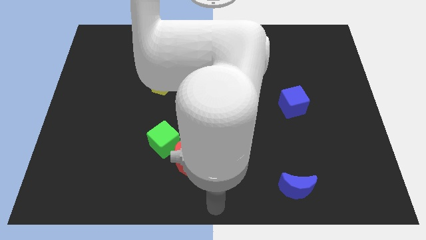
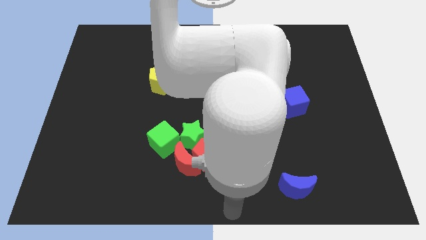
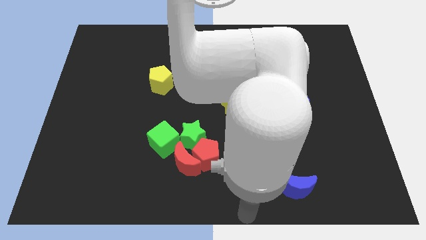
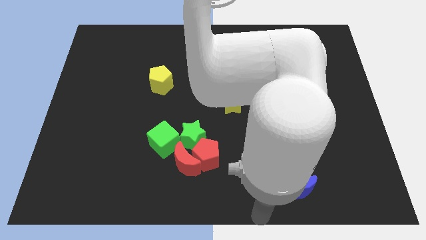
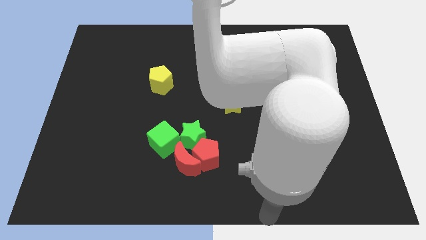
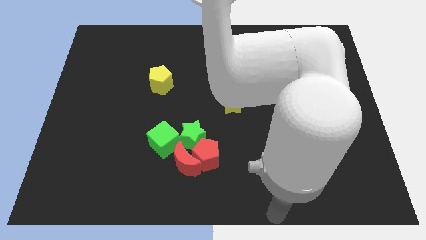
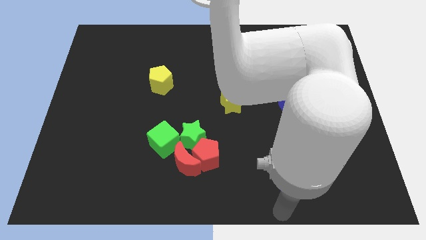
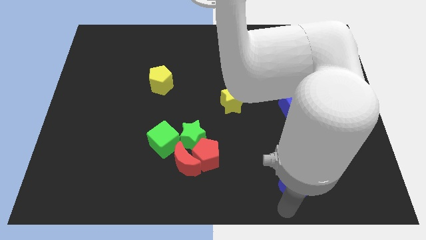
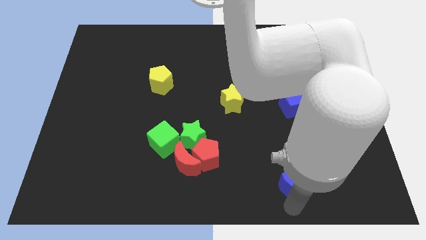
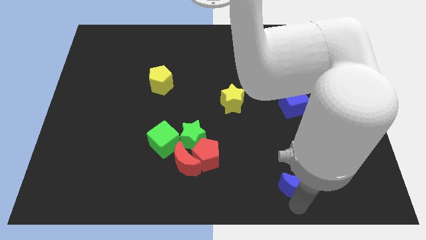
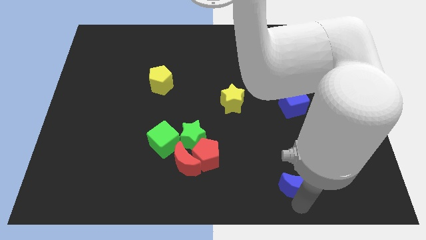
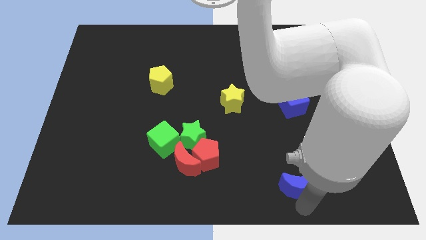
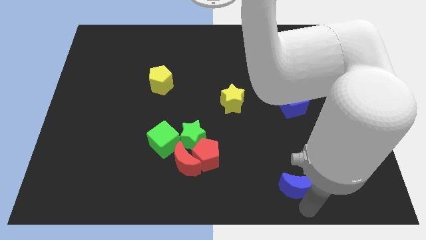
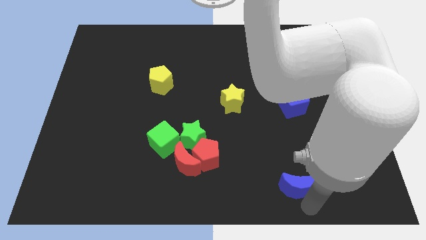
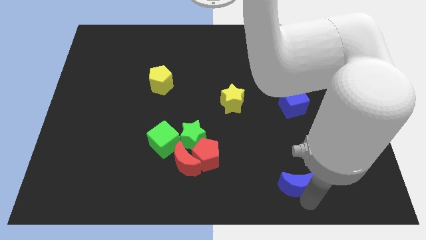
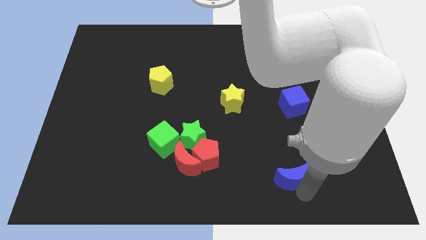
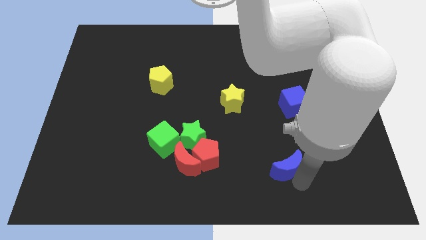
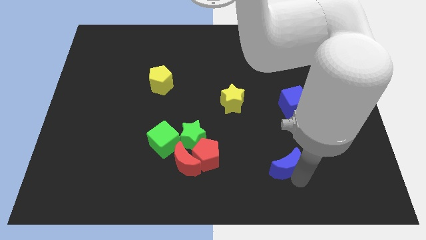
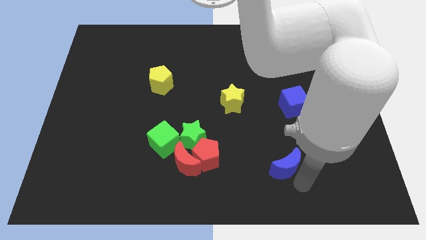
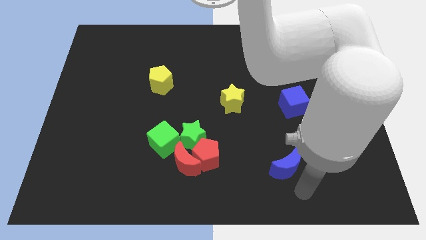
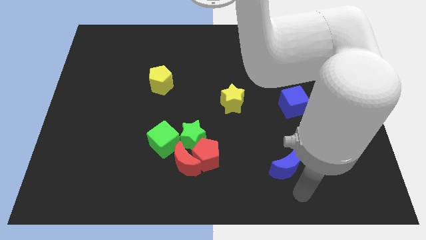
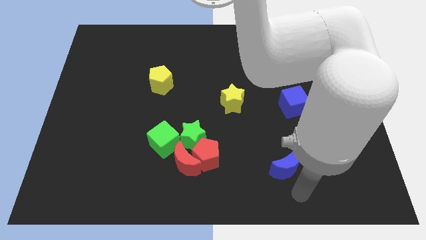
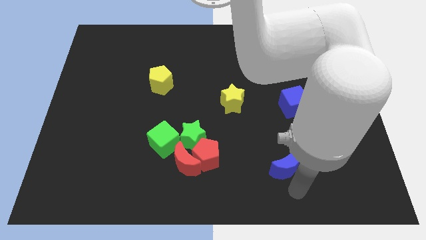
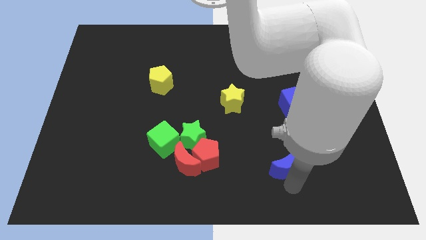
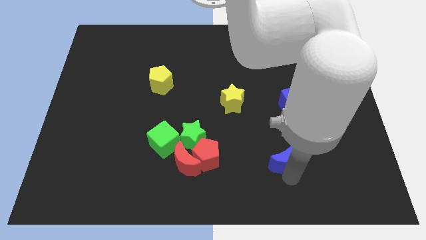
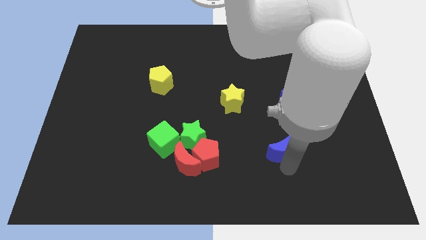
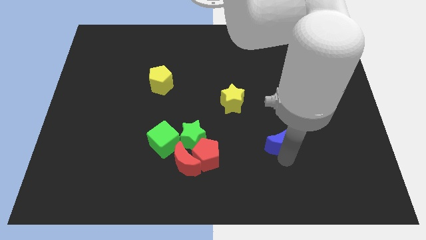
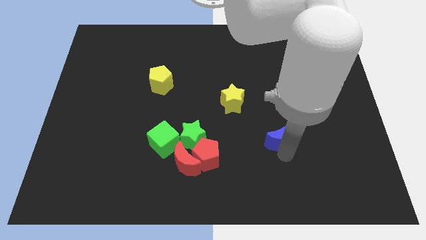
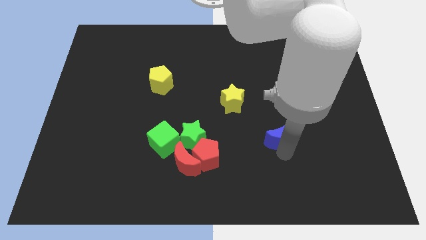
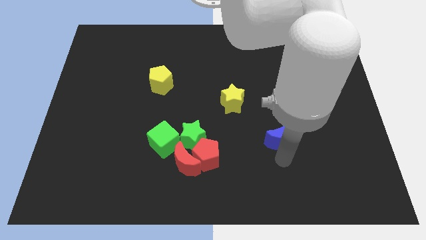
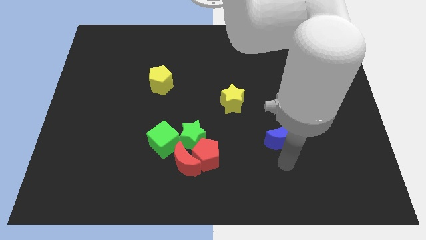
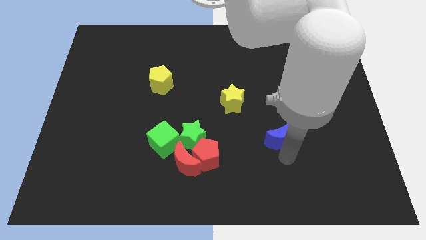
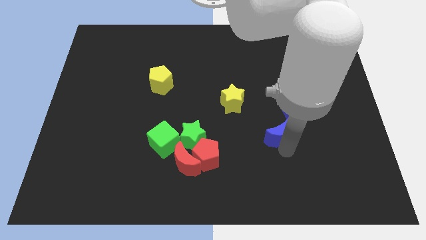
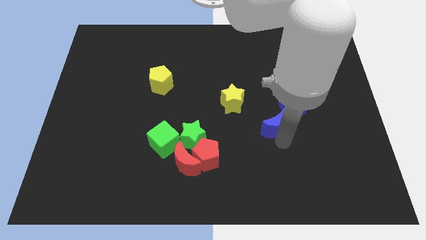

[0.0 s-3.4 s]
drag the blue moon slightly upwards

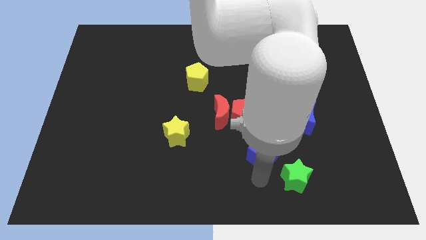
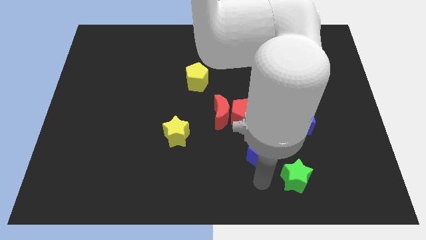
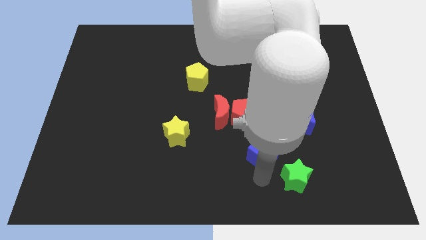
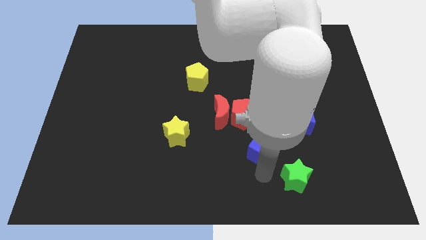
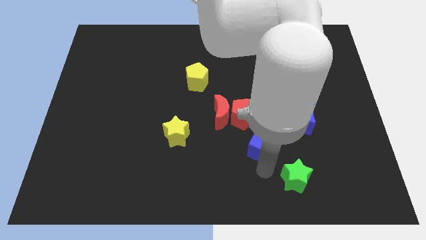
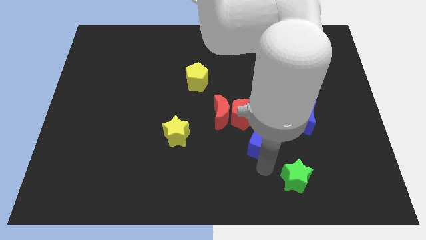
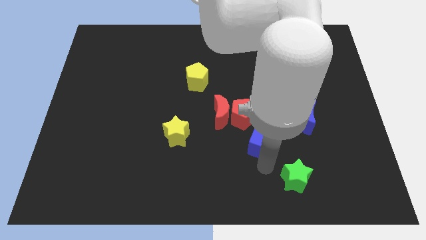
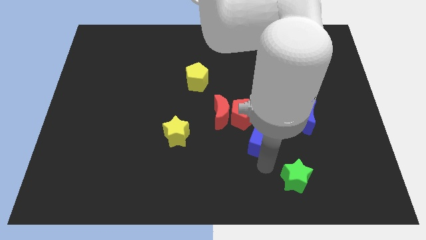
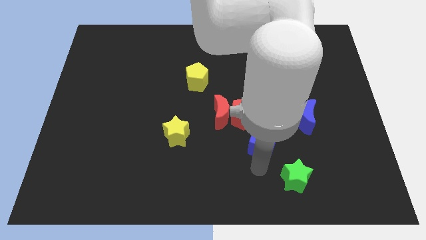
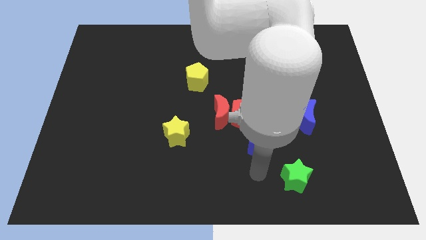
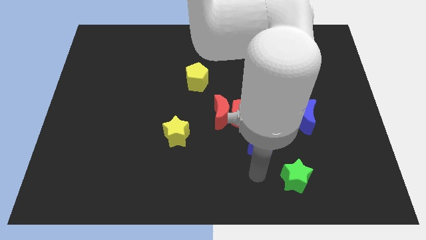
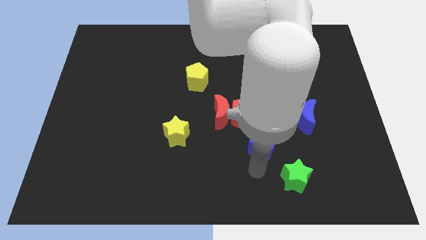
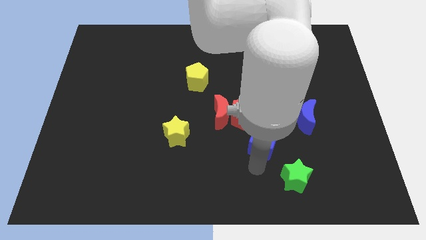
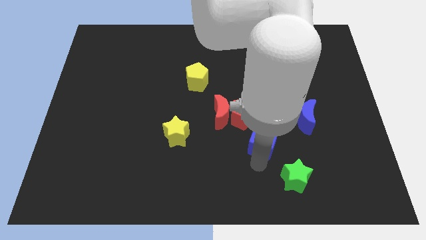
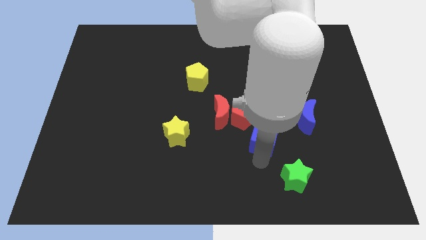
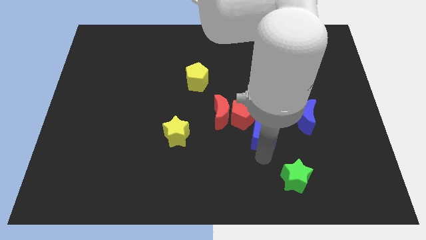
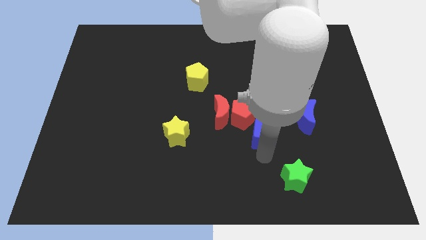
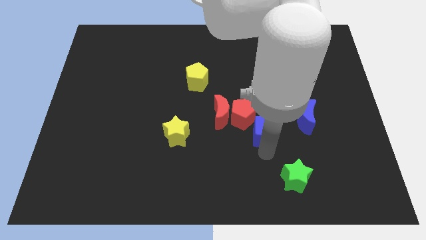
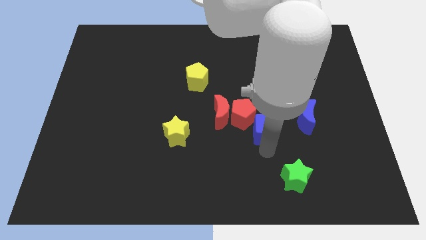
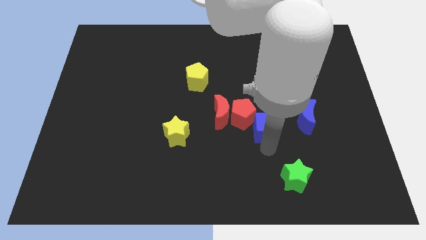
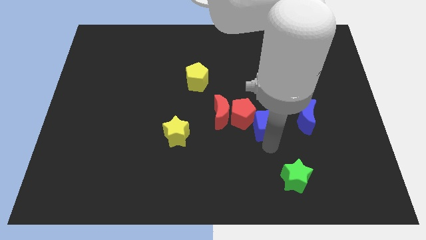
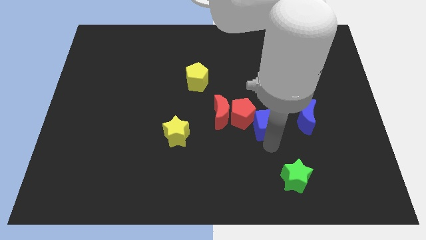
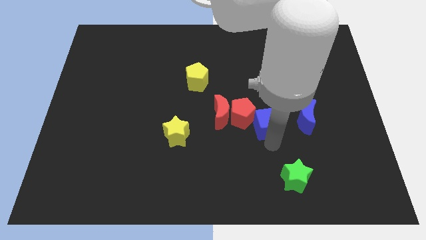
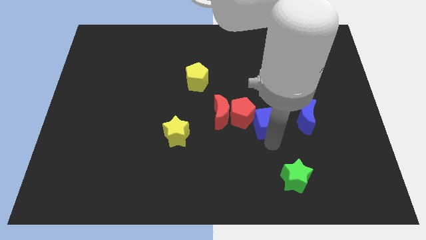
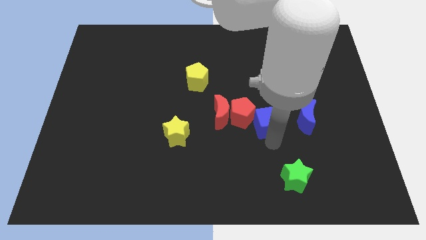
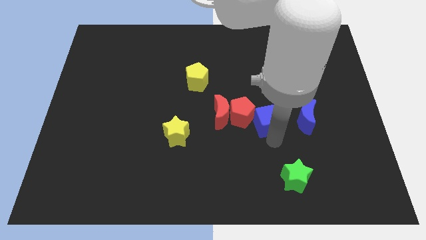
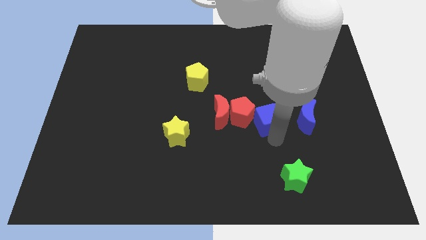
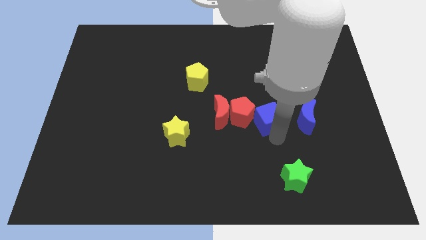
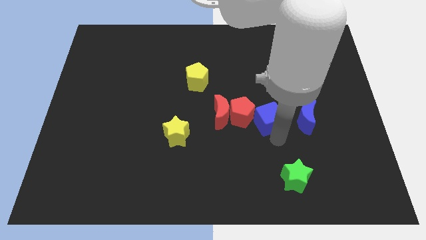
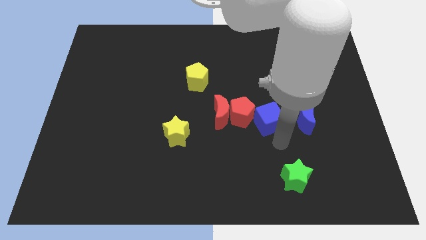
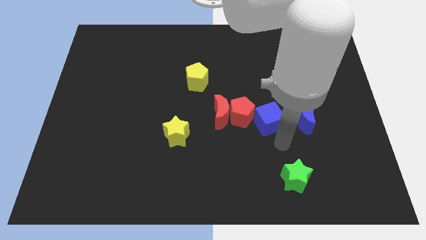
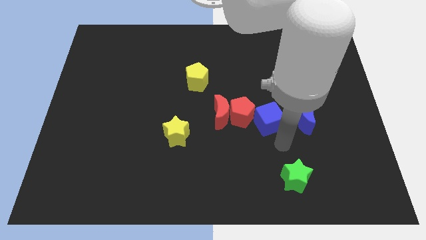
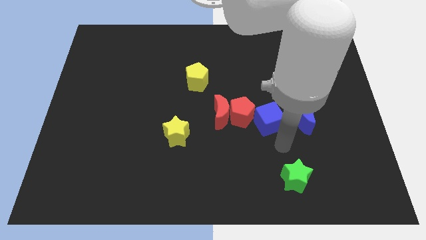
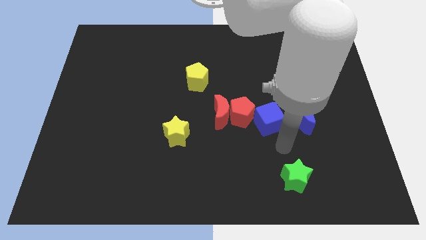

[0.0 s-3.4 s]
place the blue cube right to the red pentagon

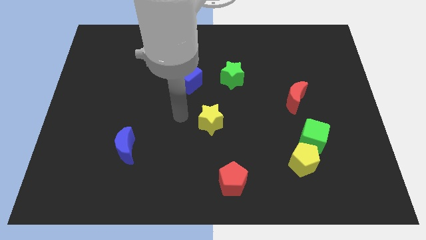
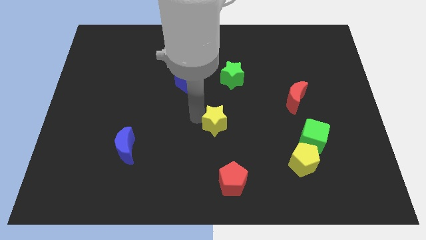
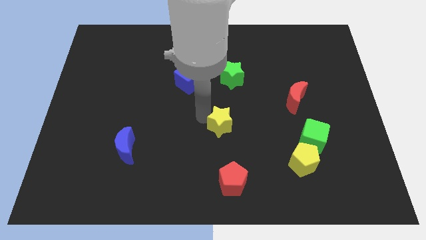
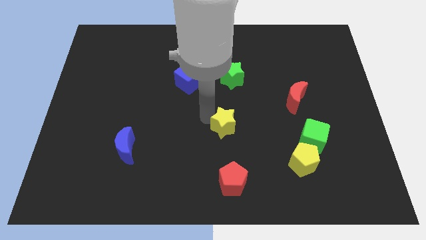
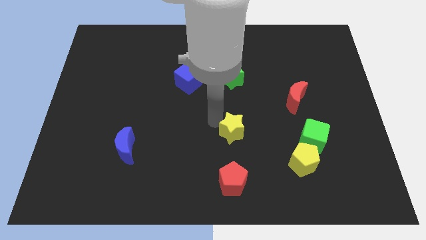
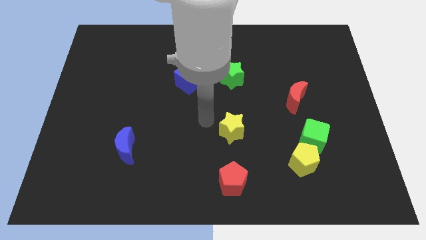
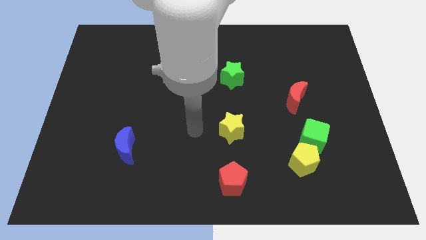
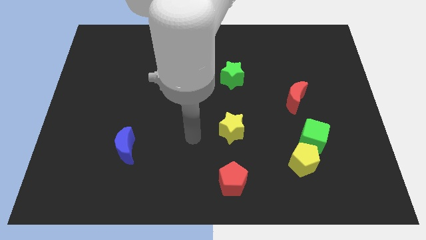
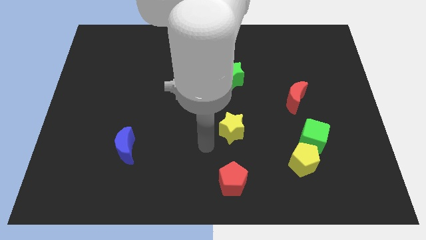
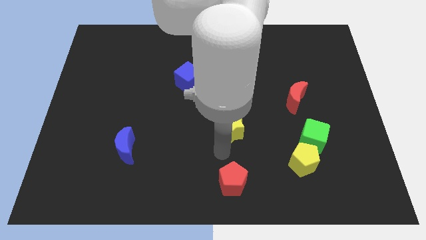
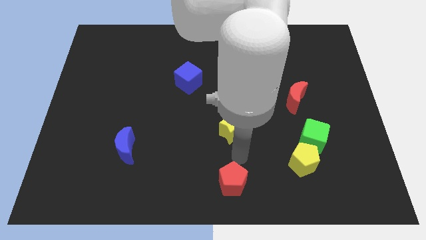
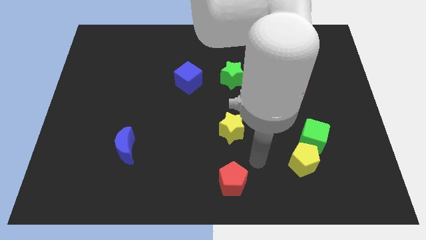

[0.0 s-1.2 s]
move the yellow star up to the red pentagon

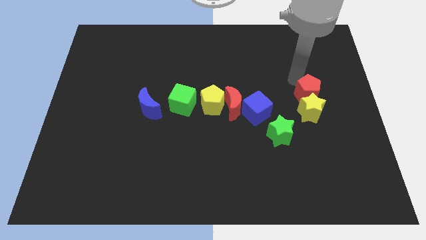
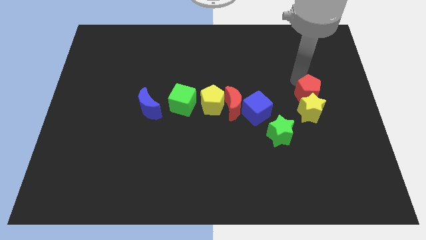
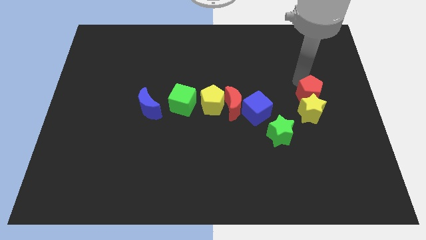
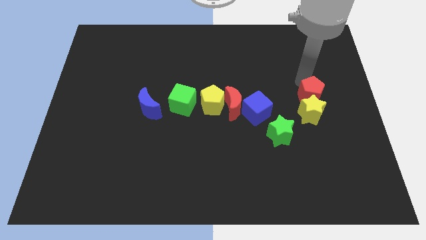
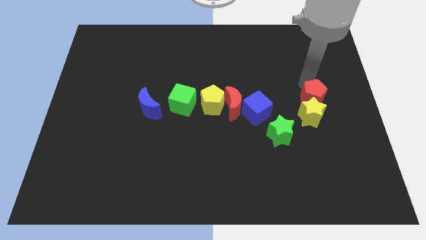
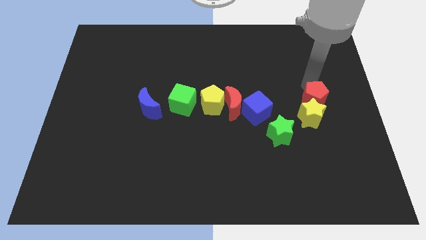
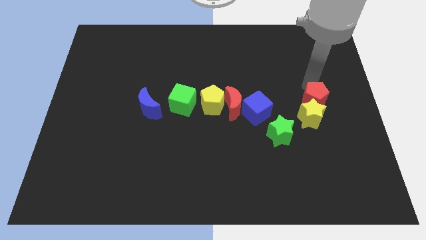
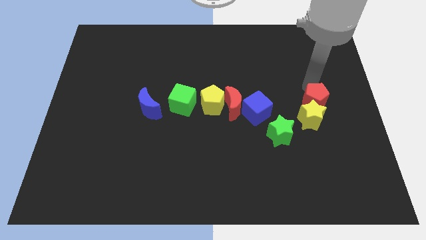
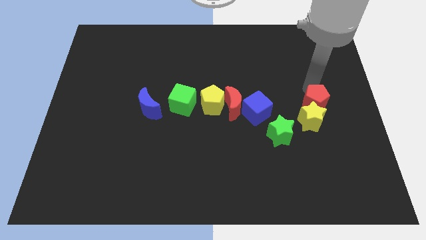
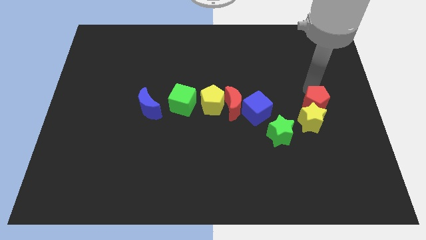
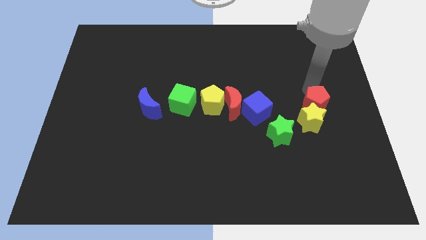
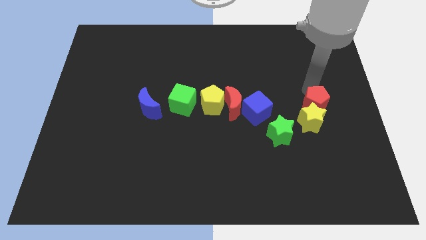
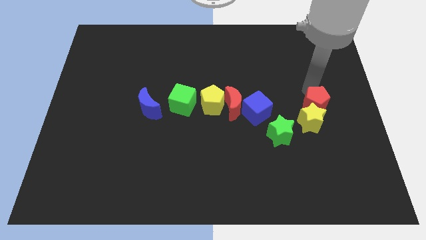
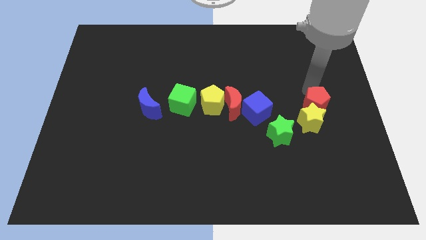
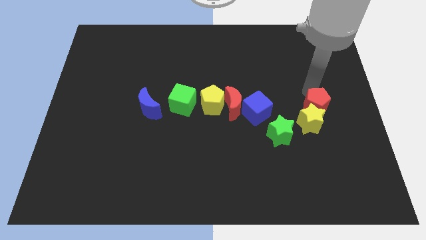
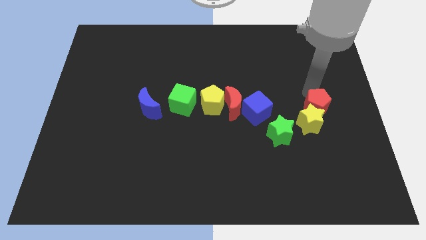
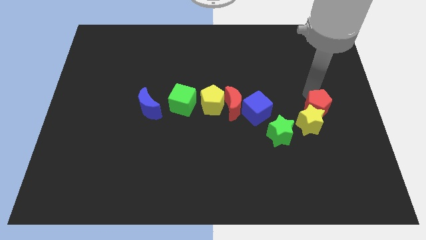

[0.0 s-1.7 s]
push the red pentagon and the yellow star down slightly
